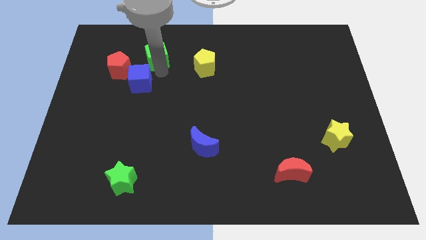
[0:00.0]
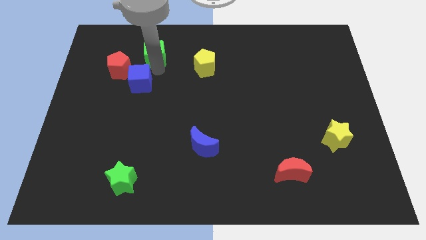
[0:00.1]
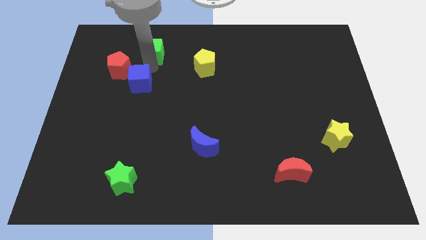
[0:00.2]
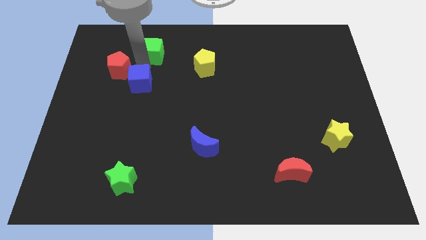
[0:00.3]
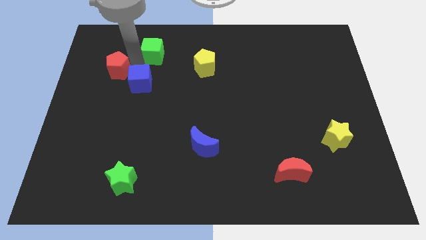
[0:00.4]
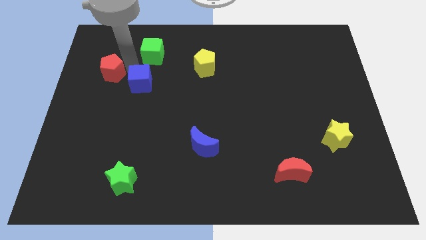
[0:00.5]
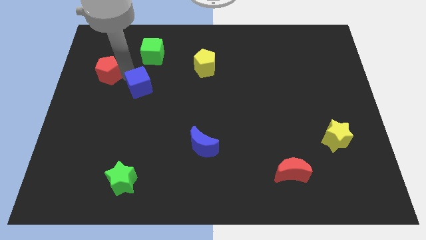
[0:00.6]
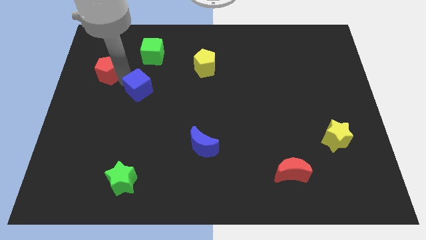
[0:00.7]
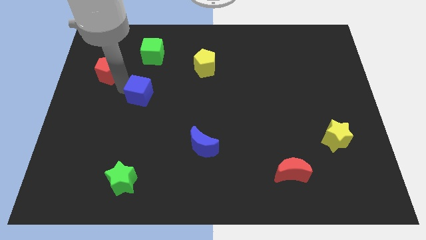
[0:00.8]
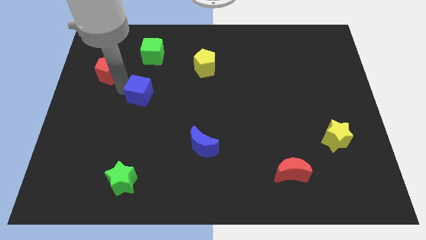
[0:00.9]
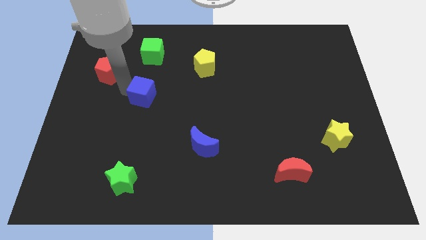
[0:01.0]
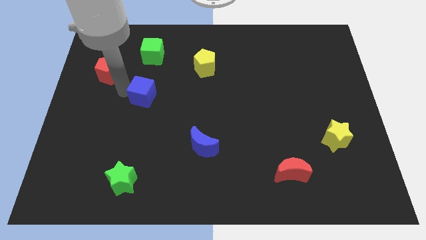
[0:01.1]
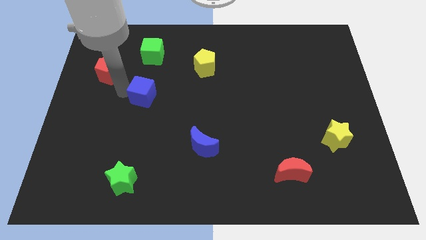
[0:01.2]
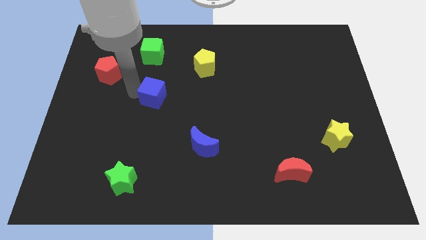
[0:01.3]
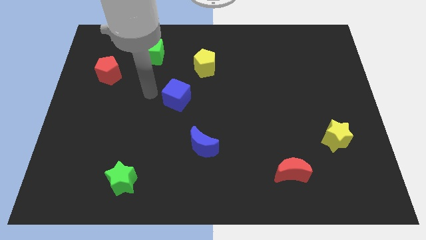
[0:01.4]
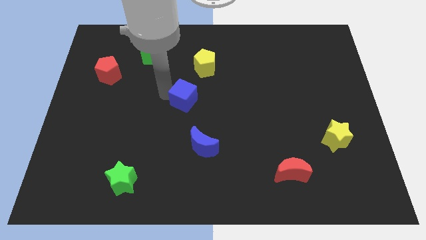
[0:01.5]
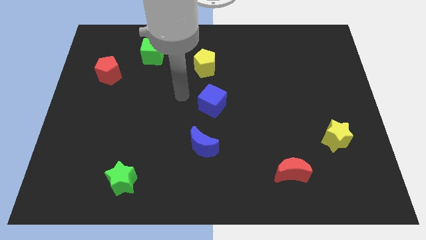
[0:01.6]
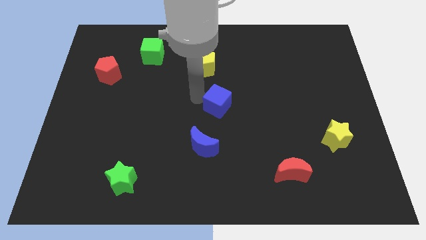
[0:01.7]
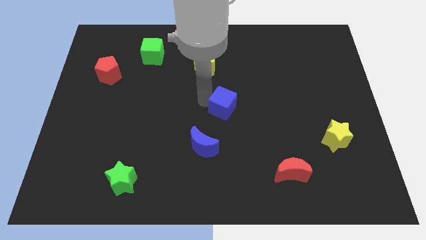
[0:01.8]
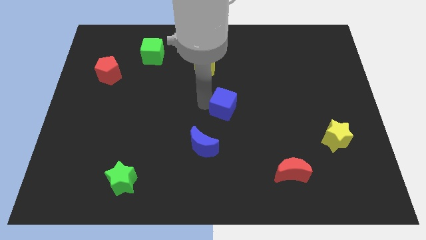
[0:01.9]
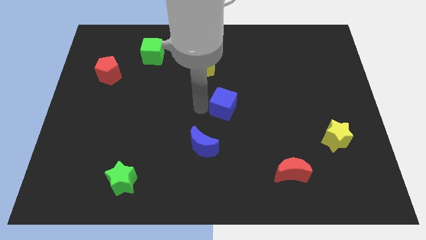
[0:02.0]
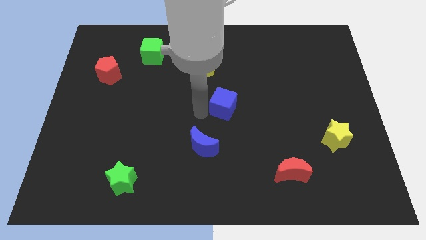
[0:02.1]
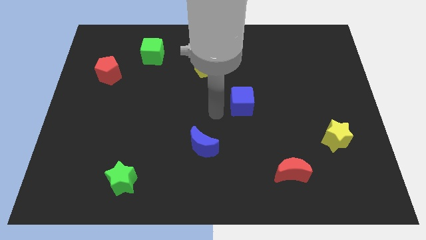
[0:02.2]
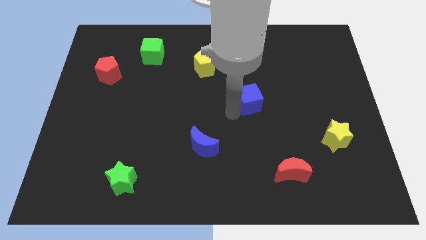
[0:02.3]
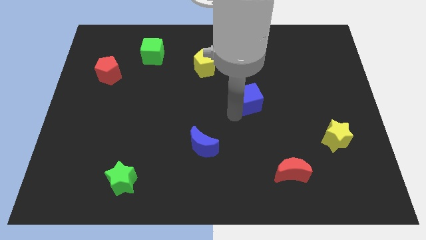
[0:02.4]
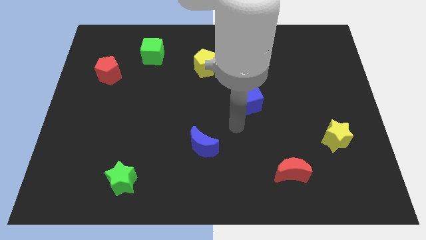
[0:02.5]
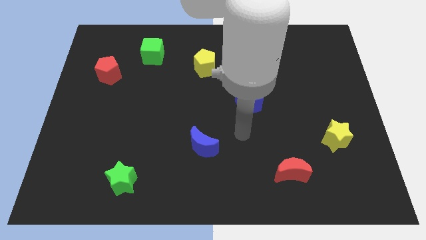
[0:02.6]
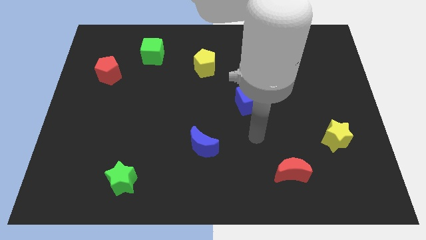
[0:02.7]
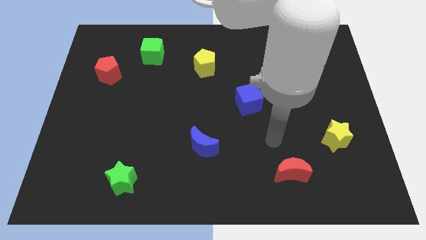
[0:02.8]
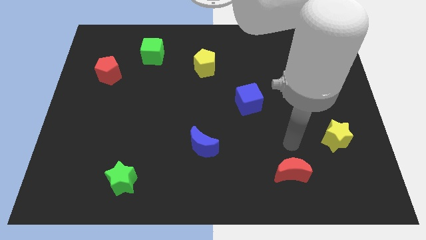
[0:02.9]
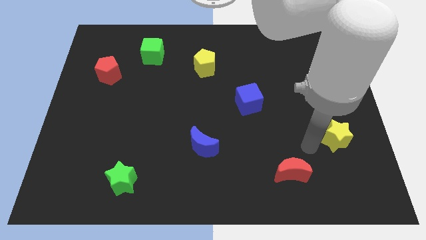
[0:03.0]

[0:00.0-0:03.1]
place the blue cube diagonally below the bottom right side of the yellow pentagon

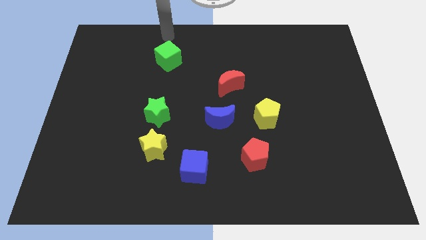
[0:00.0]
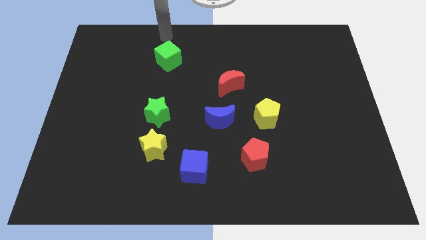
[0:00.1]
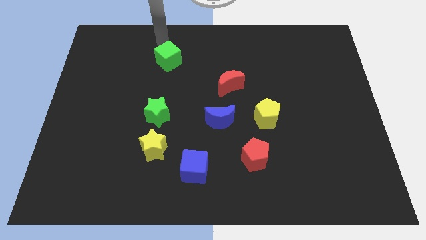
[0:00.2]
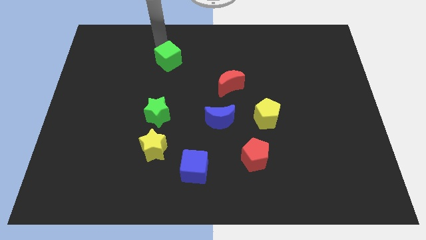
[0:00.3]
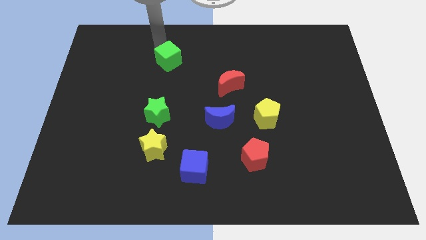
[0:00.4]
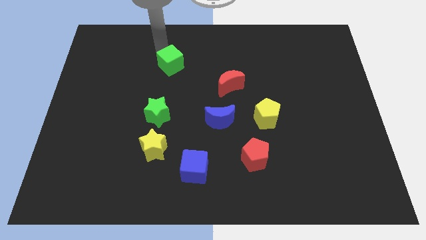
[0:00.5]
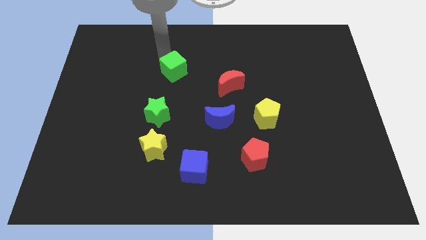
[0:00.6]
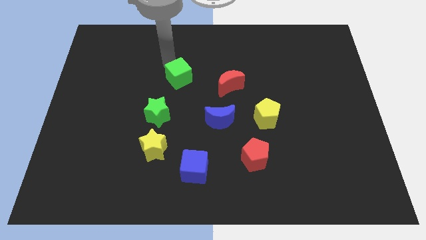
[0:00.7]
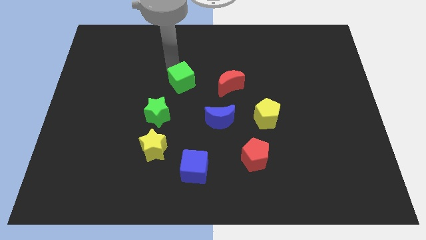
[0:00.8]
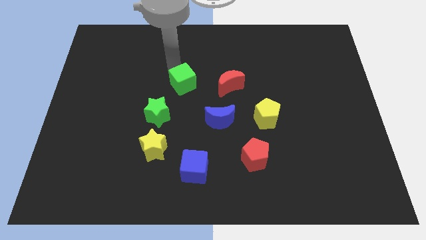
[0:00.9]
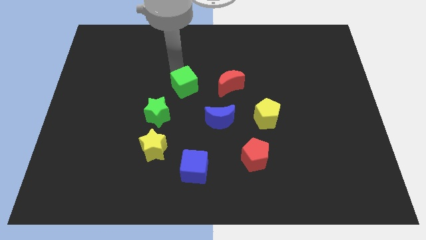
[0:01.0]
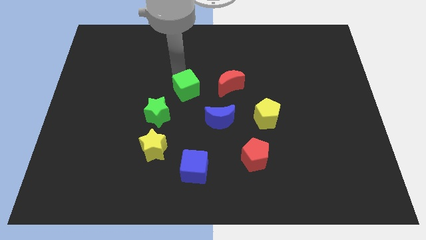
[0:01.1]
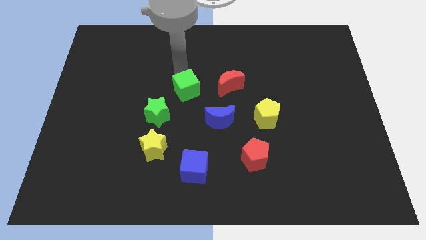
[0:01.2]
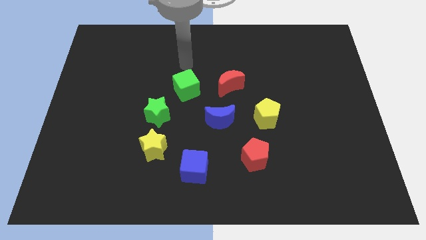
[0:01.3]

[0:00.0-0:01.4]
push the green cube towards top right corner of the green star

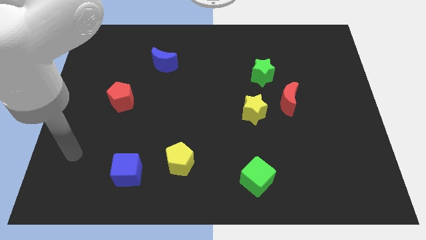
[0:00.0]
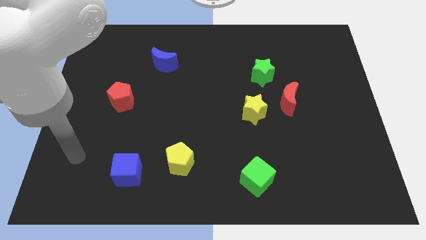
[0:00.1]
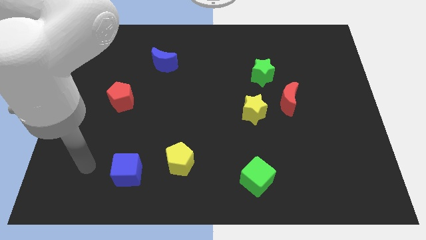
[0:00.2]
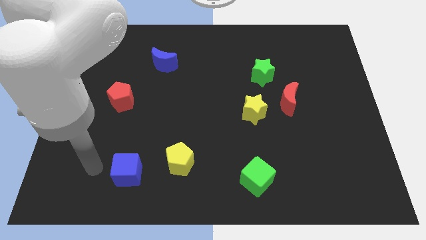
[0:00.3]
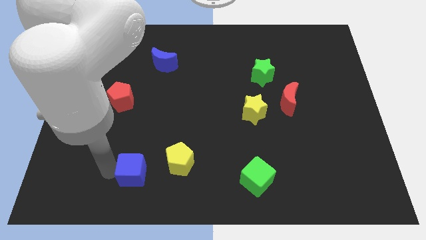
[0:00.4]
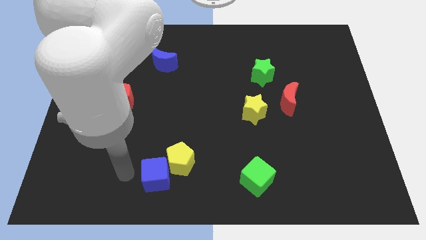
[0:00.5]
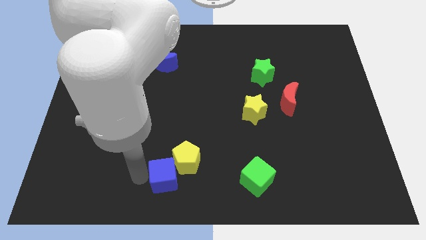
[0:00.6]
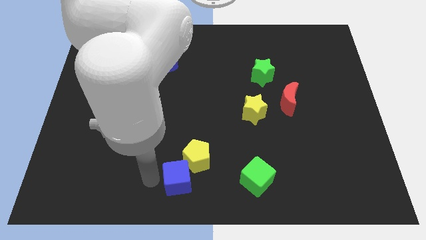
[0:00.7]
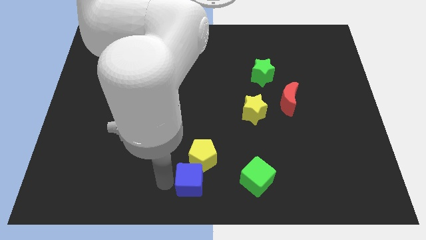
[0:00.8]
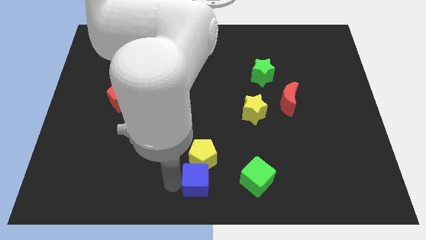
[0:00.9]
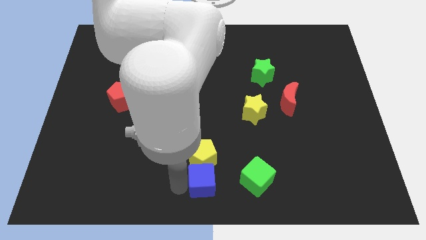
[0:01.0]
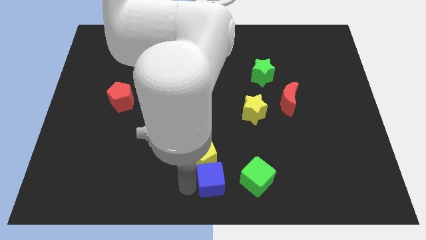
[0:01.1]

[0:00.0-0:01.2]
place the blue cube at the bottom of the yellow pentagon

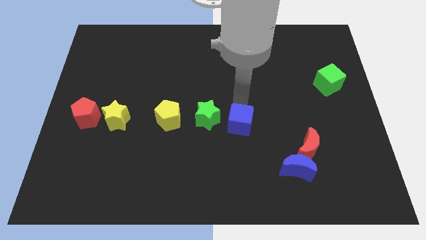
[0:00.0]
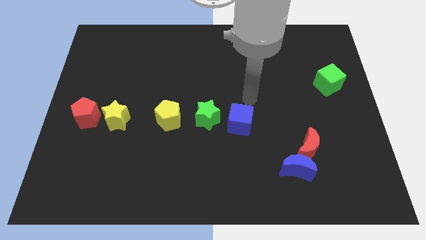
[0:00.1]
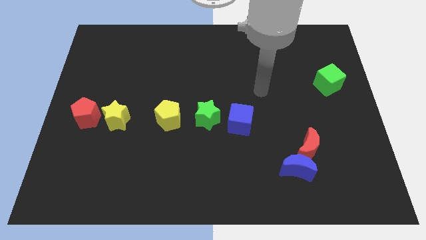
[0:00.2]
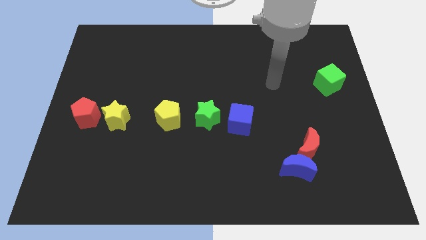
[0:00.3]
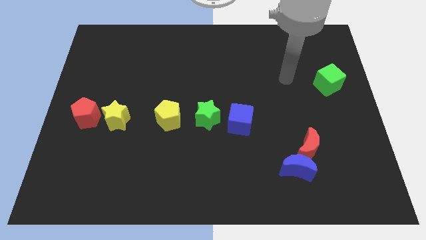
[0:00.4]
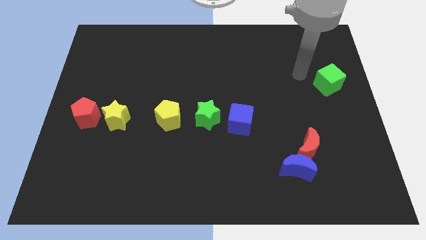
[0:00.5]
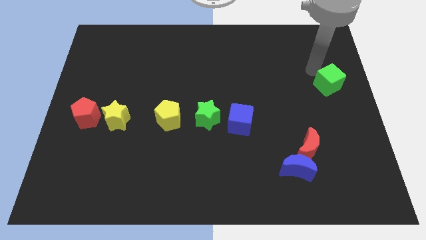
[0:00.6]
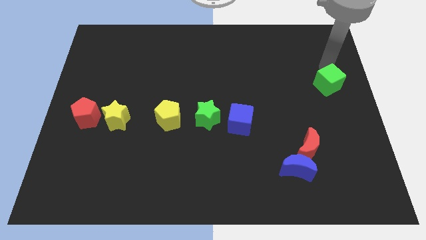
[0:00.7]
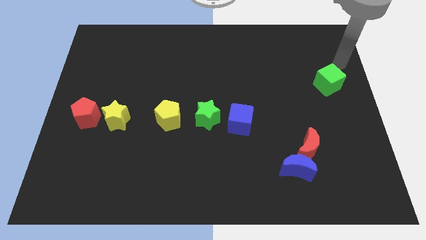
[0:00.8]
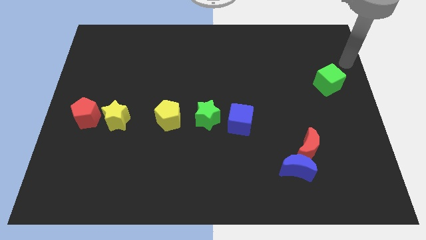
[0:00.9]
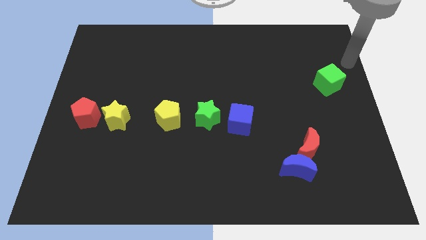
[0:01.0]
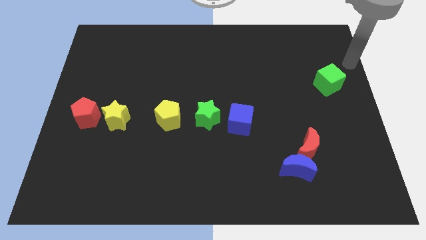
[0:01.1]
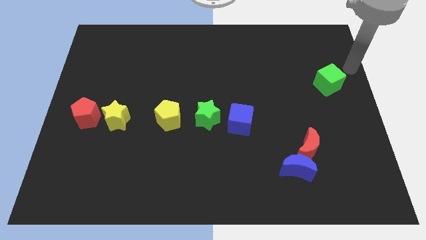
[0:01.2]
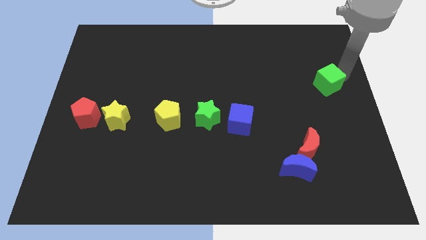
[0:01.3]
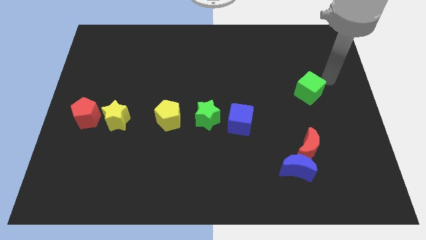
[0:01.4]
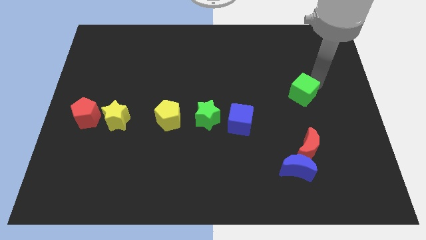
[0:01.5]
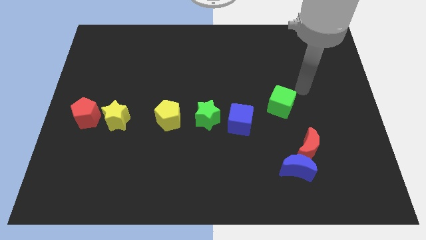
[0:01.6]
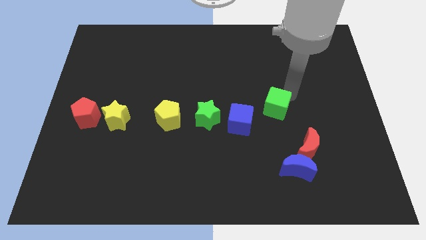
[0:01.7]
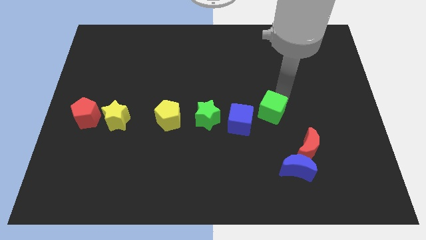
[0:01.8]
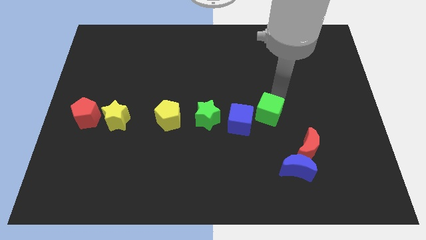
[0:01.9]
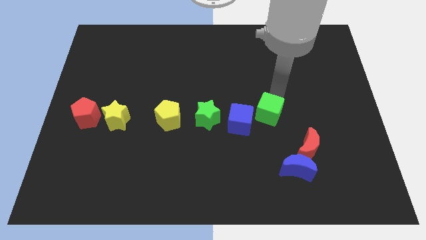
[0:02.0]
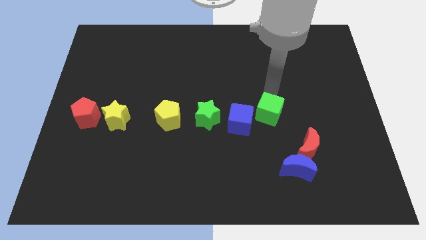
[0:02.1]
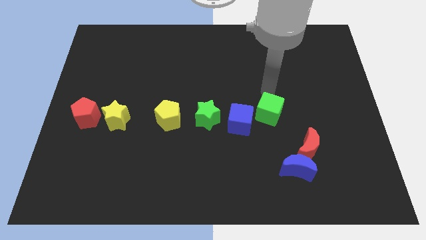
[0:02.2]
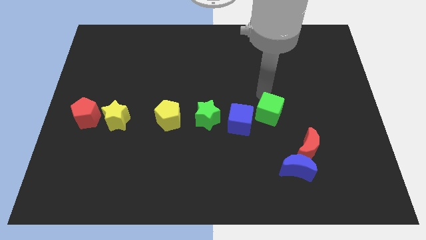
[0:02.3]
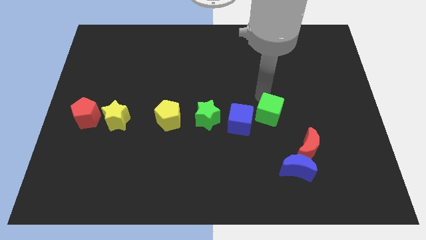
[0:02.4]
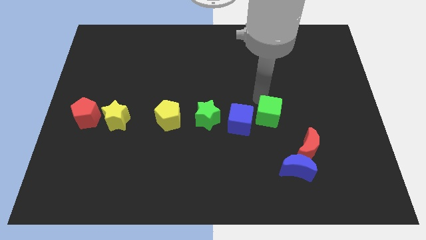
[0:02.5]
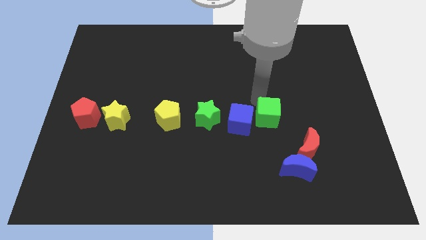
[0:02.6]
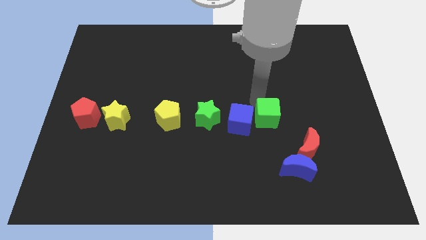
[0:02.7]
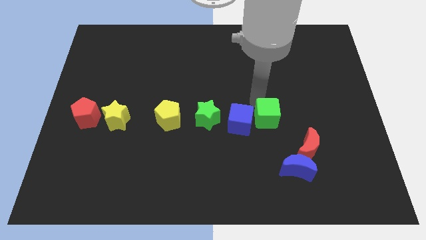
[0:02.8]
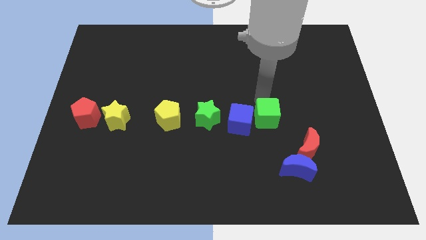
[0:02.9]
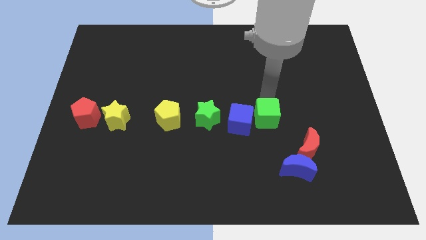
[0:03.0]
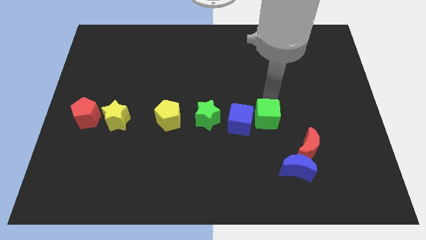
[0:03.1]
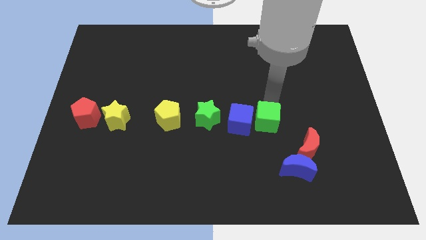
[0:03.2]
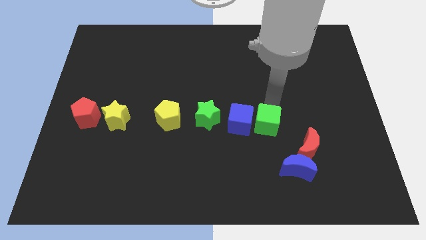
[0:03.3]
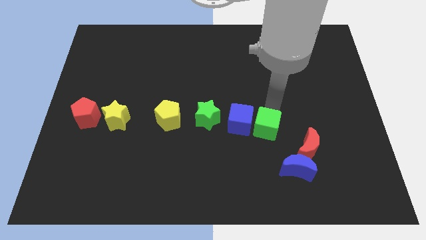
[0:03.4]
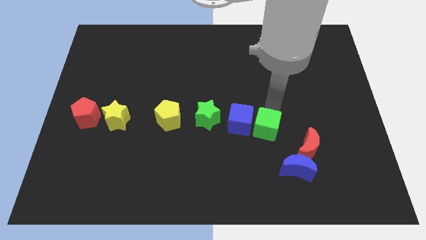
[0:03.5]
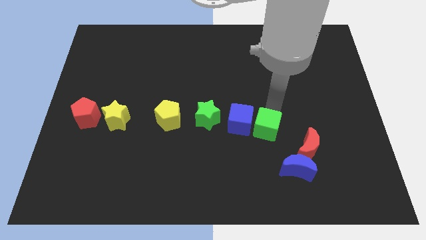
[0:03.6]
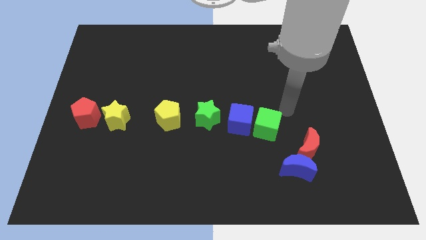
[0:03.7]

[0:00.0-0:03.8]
move green cube close to blue cube
